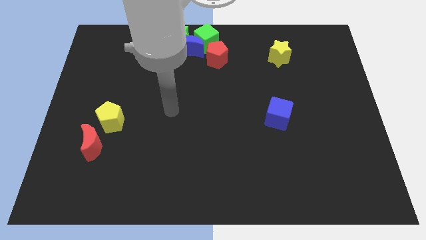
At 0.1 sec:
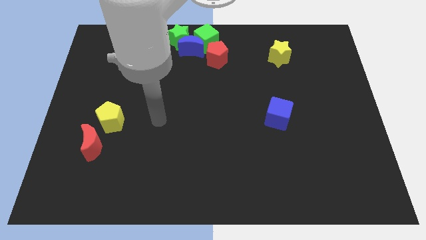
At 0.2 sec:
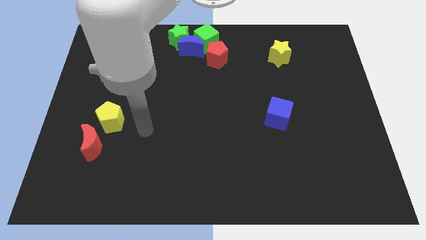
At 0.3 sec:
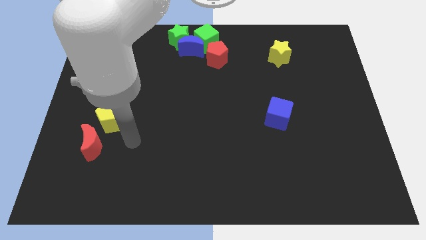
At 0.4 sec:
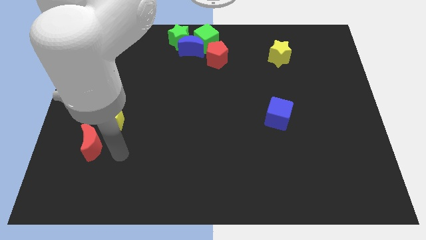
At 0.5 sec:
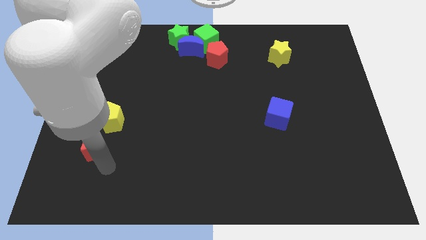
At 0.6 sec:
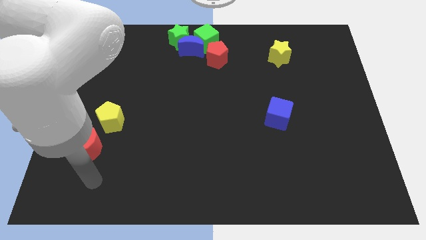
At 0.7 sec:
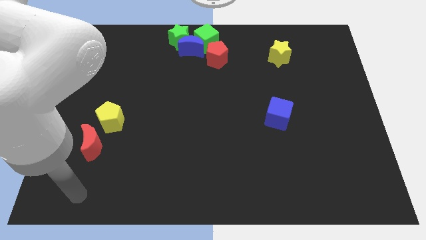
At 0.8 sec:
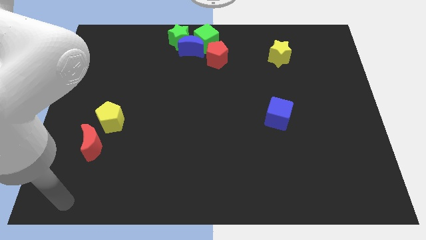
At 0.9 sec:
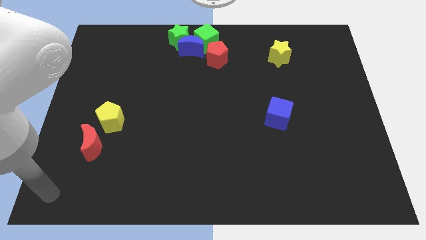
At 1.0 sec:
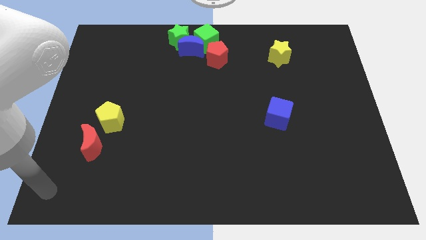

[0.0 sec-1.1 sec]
move your arm to the bottom left corner of the board

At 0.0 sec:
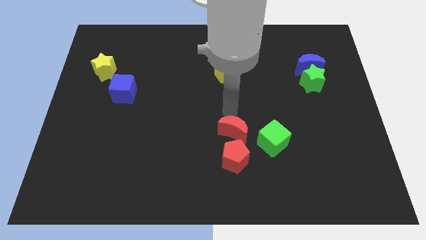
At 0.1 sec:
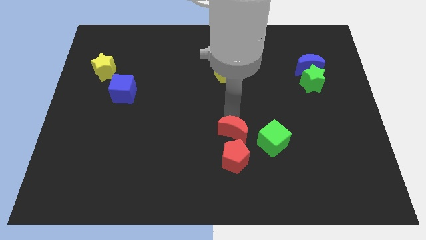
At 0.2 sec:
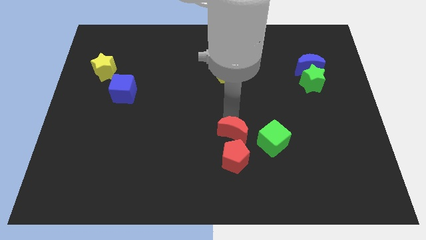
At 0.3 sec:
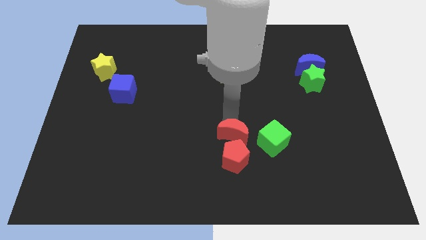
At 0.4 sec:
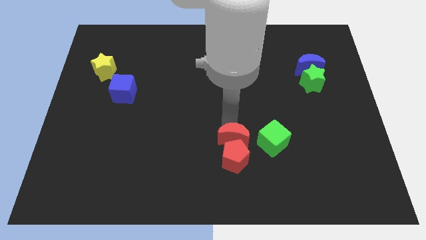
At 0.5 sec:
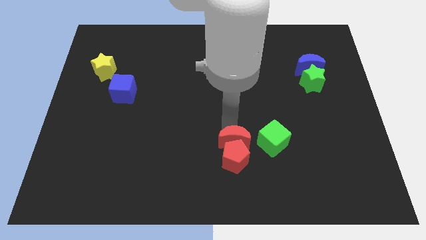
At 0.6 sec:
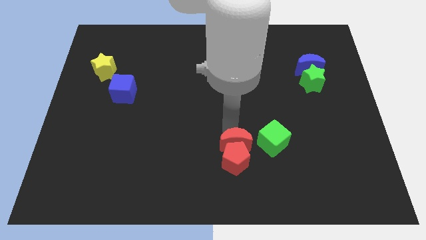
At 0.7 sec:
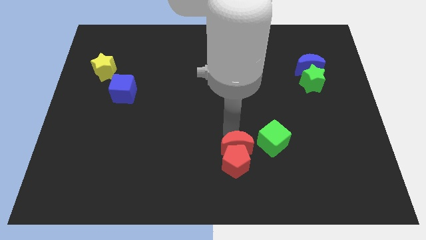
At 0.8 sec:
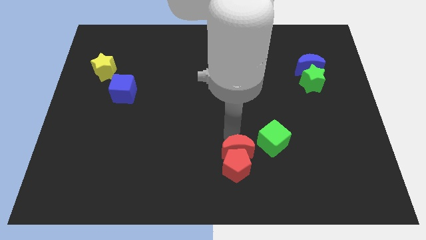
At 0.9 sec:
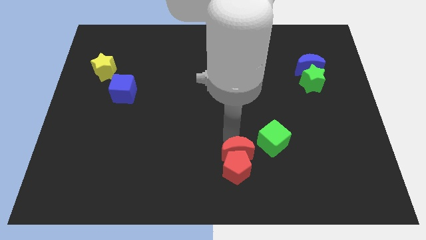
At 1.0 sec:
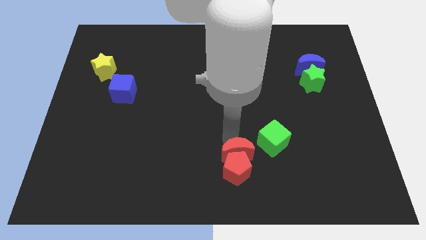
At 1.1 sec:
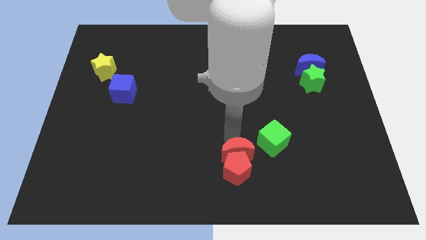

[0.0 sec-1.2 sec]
push red moon in to red pentagon

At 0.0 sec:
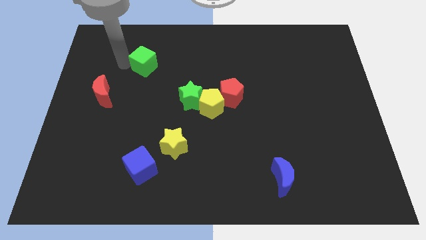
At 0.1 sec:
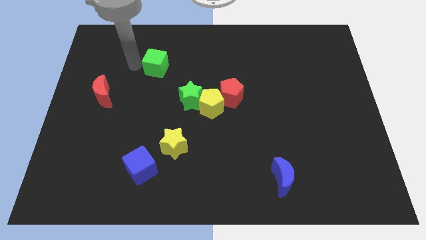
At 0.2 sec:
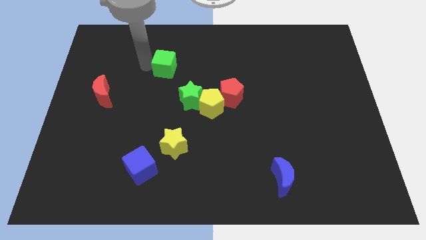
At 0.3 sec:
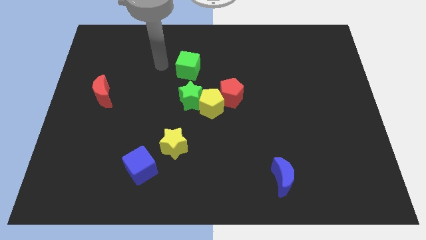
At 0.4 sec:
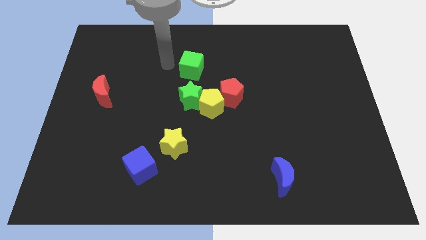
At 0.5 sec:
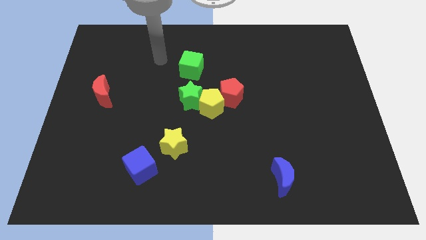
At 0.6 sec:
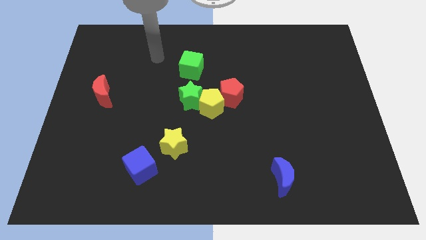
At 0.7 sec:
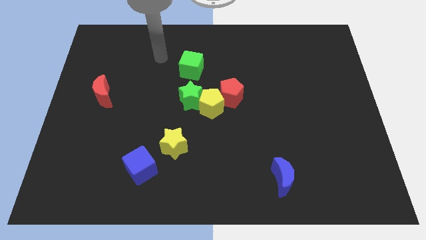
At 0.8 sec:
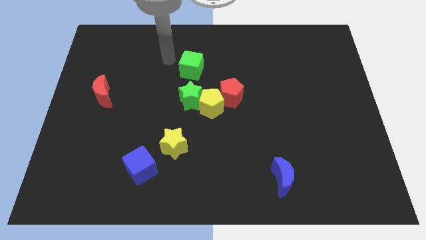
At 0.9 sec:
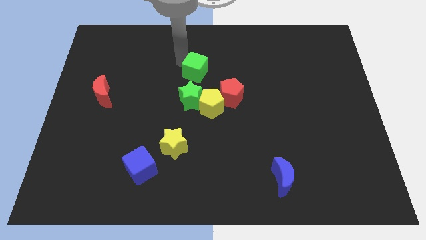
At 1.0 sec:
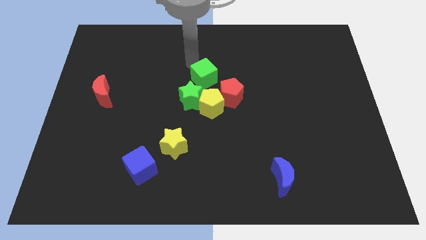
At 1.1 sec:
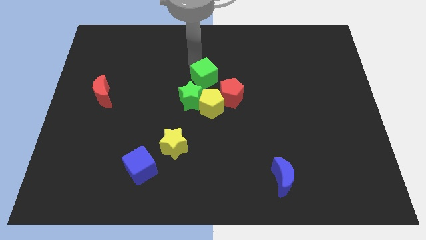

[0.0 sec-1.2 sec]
push the green cube to the top of the yellow pentagon

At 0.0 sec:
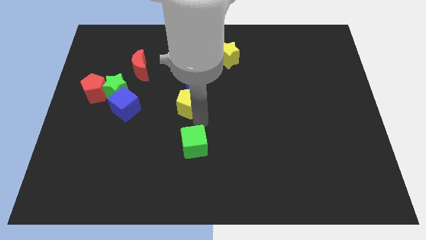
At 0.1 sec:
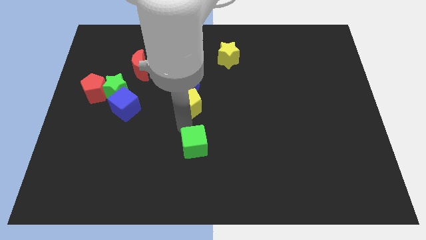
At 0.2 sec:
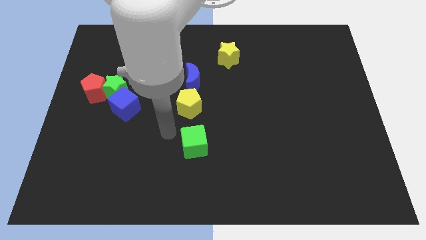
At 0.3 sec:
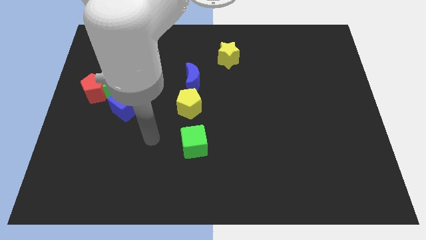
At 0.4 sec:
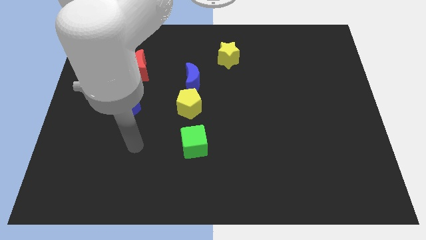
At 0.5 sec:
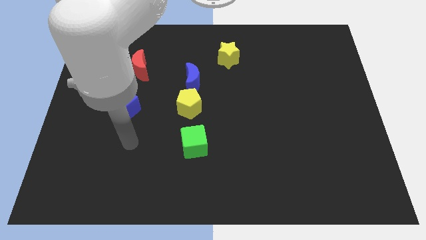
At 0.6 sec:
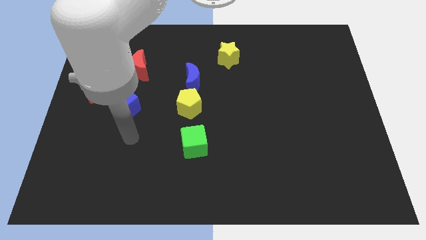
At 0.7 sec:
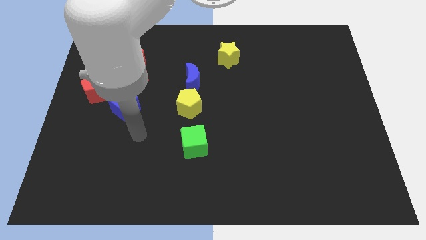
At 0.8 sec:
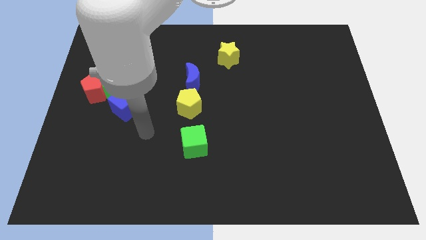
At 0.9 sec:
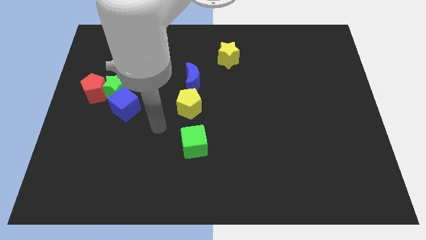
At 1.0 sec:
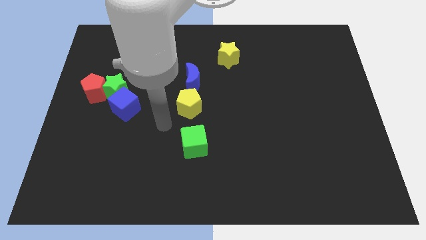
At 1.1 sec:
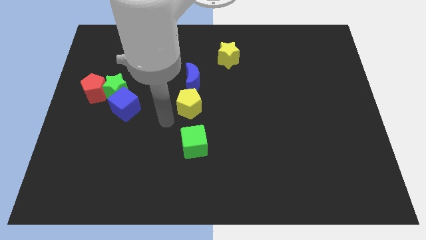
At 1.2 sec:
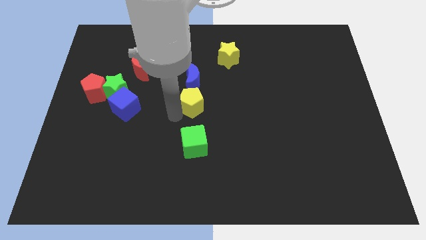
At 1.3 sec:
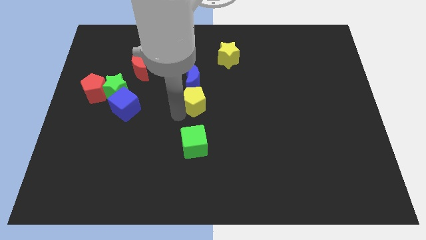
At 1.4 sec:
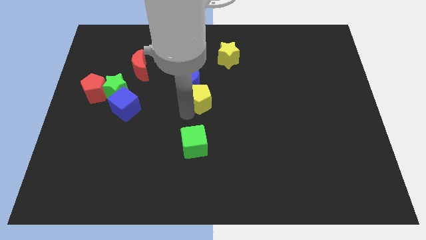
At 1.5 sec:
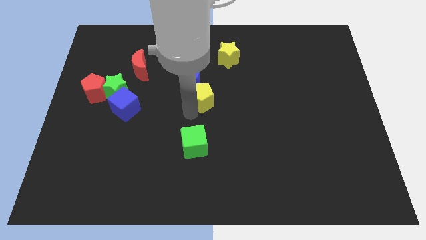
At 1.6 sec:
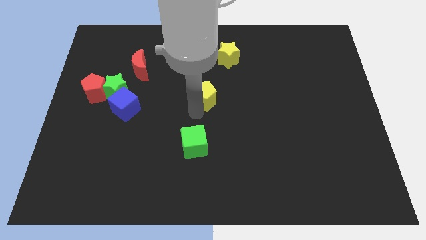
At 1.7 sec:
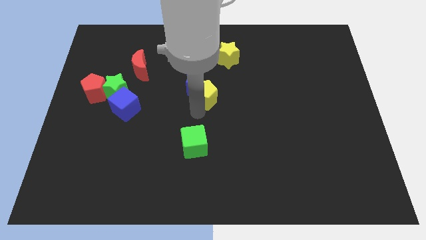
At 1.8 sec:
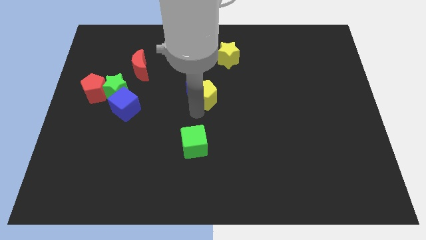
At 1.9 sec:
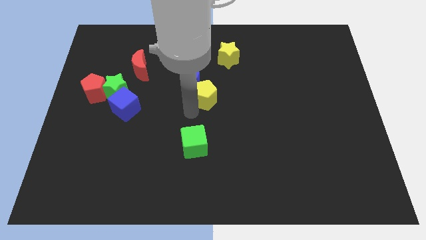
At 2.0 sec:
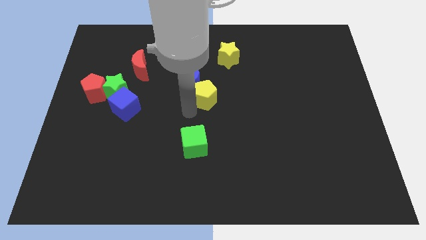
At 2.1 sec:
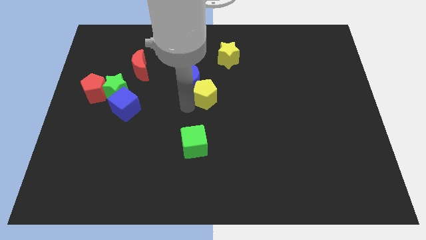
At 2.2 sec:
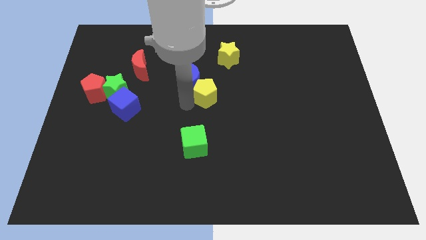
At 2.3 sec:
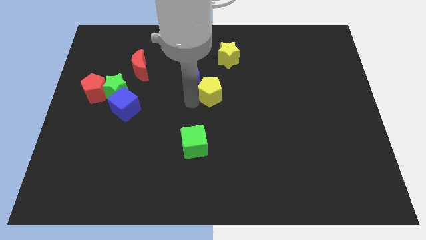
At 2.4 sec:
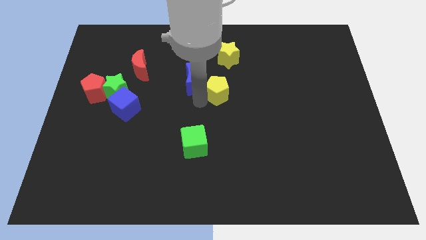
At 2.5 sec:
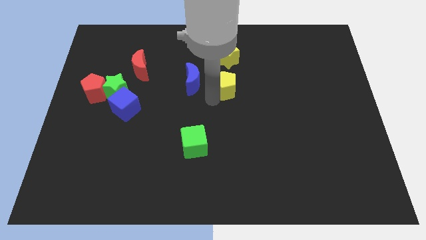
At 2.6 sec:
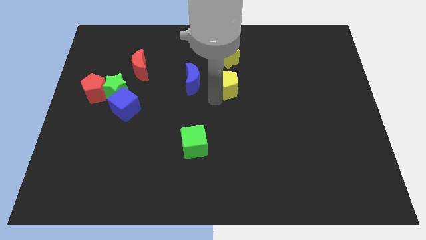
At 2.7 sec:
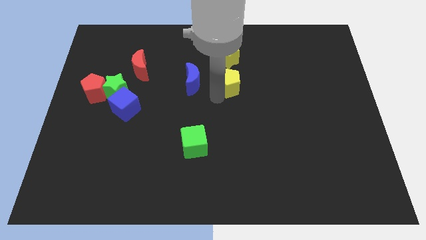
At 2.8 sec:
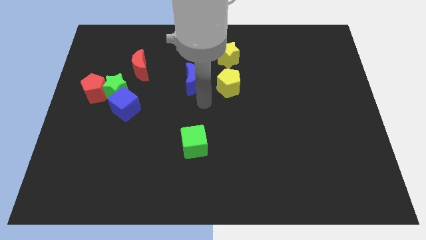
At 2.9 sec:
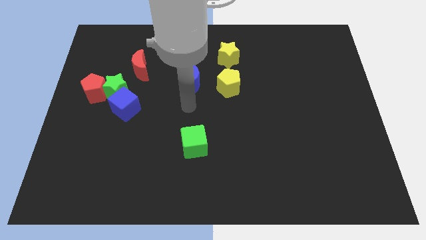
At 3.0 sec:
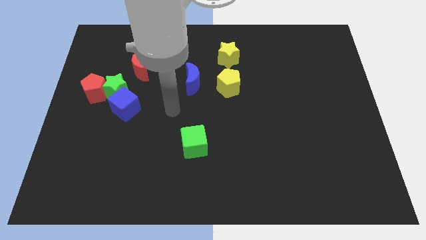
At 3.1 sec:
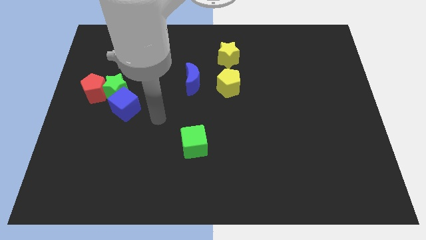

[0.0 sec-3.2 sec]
push the yellow pentagon to the right of the blue crescent

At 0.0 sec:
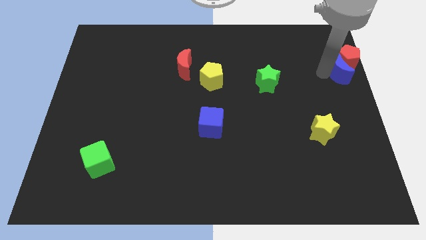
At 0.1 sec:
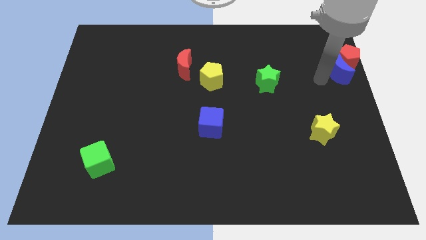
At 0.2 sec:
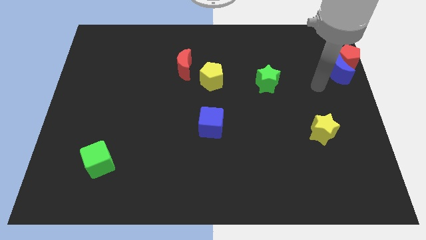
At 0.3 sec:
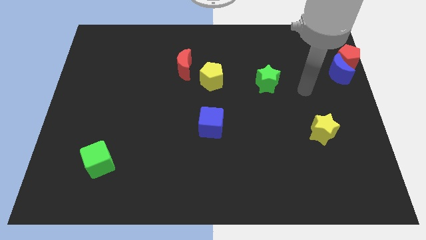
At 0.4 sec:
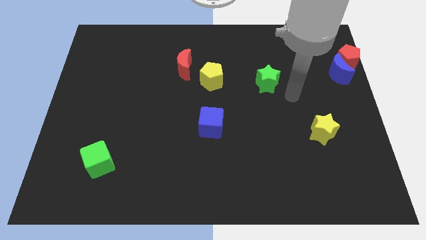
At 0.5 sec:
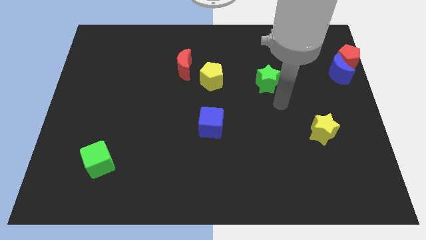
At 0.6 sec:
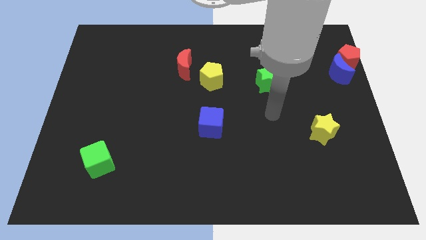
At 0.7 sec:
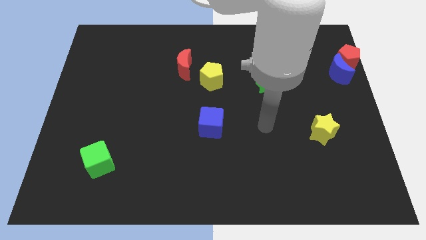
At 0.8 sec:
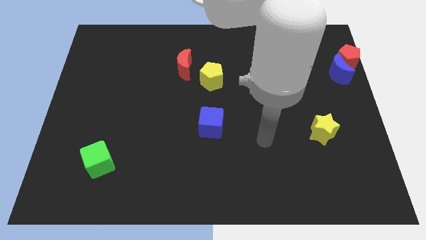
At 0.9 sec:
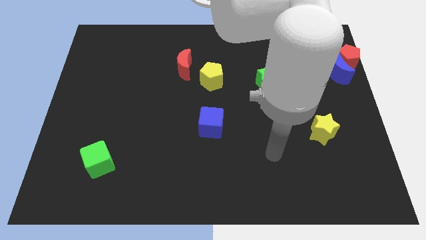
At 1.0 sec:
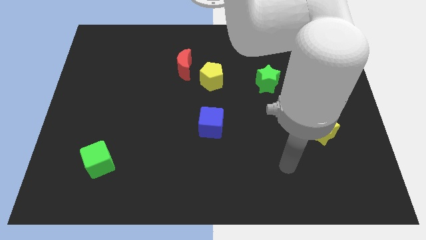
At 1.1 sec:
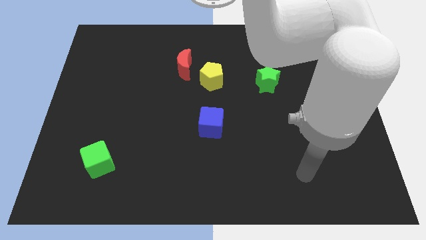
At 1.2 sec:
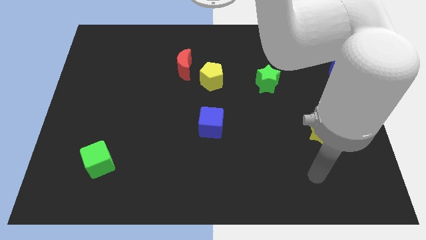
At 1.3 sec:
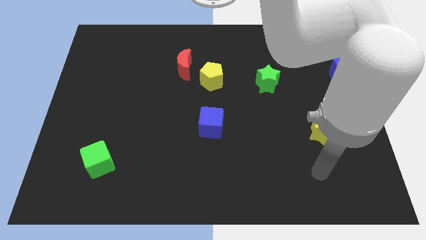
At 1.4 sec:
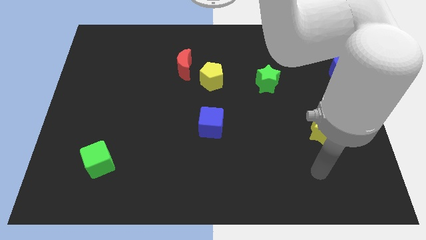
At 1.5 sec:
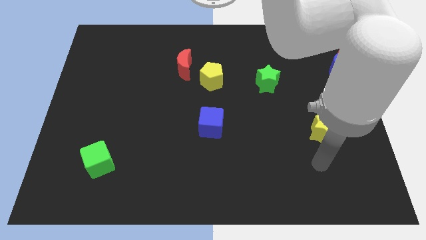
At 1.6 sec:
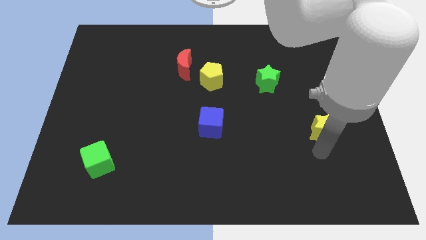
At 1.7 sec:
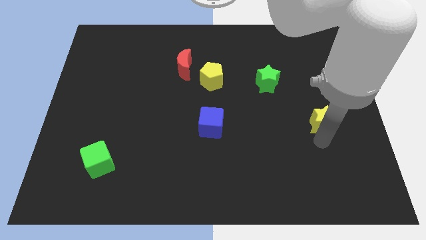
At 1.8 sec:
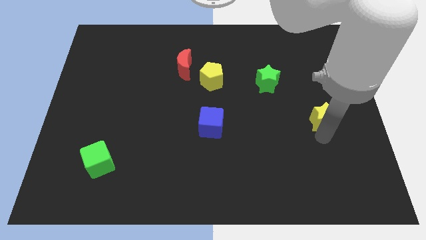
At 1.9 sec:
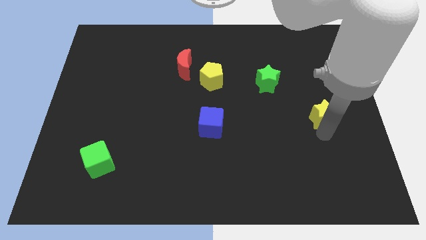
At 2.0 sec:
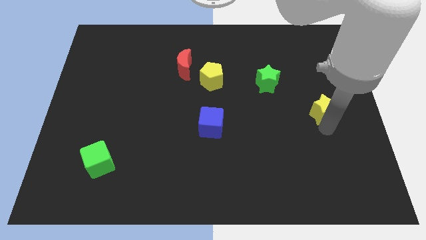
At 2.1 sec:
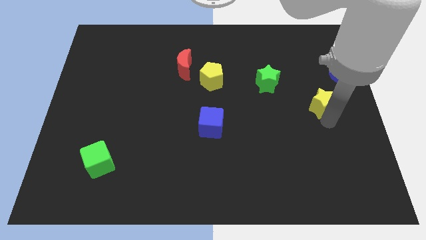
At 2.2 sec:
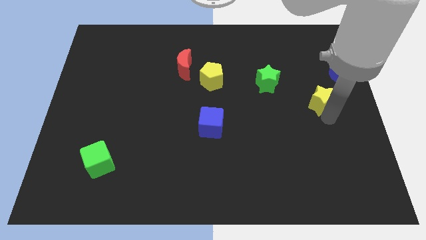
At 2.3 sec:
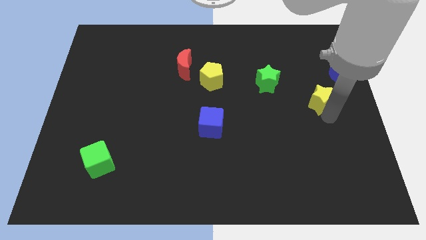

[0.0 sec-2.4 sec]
move the yellow slightly towards the top center
